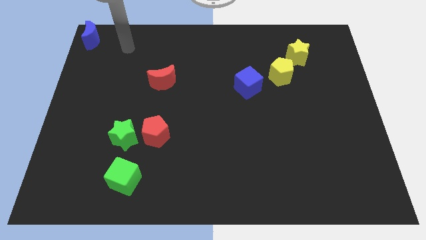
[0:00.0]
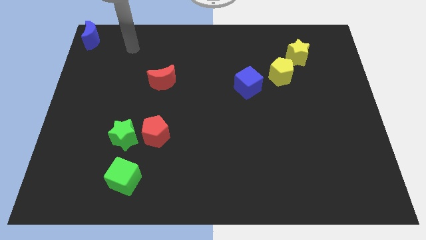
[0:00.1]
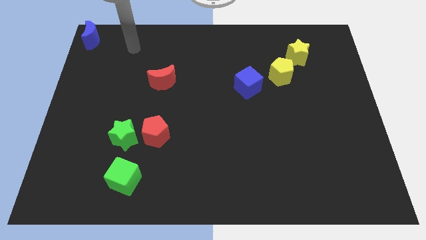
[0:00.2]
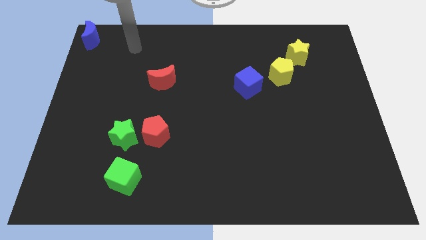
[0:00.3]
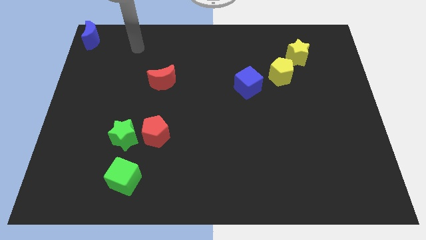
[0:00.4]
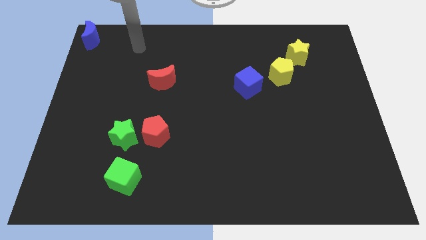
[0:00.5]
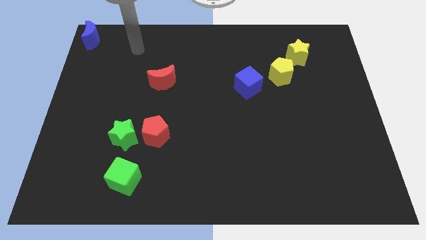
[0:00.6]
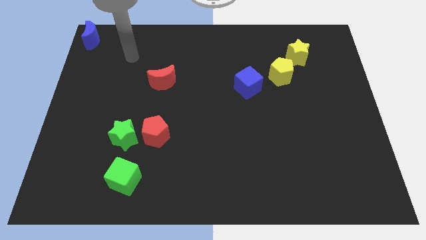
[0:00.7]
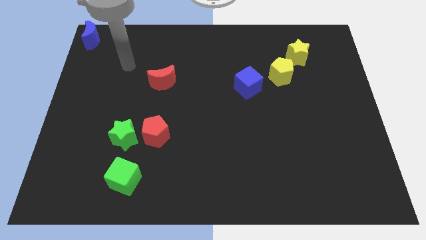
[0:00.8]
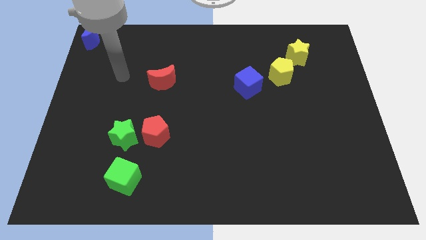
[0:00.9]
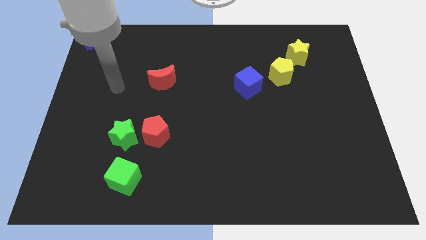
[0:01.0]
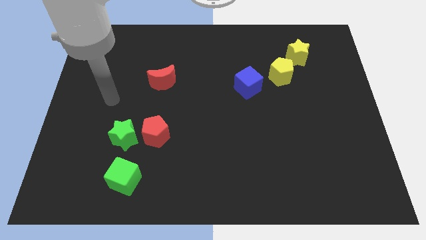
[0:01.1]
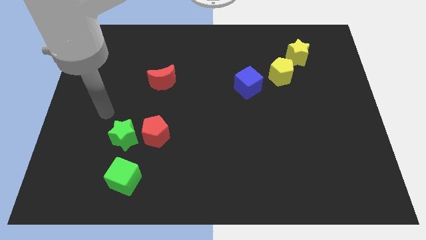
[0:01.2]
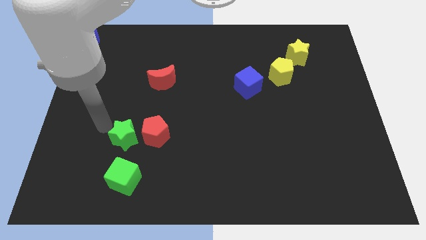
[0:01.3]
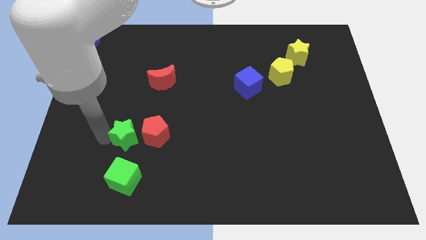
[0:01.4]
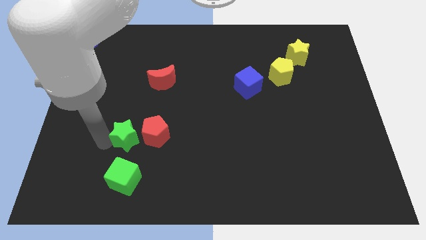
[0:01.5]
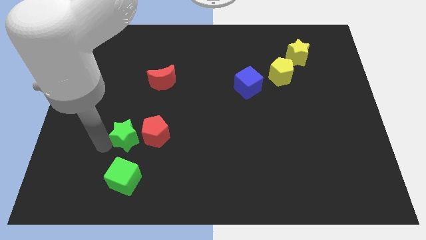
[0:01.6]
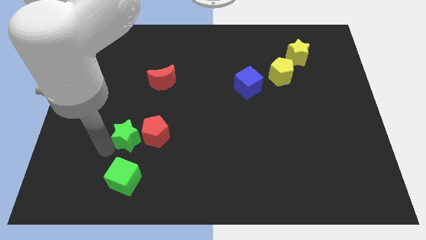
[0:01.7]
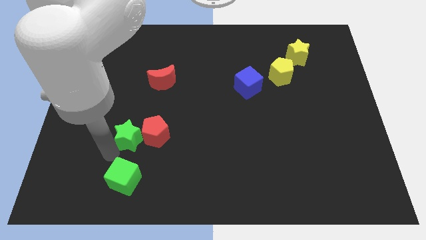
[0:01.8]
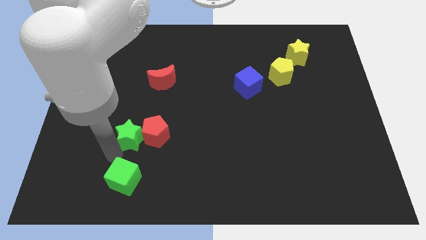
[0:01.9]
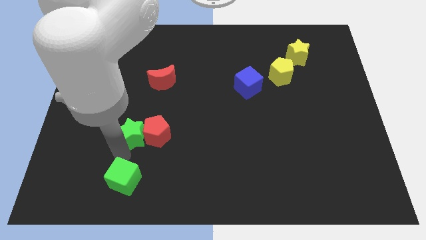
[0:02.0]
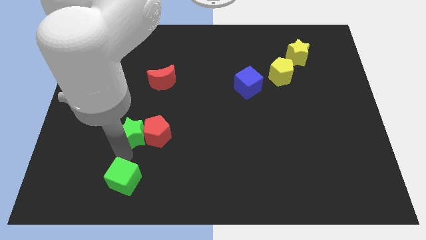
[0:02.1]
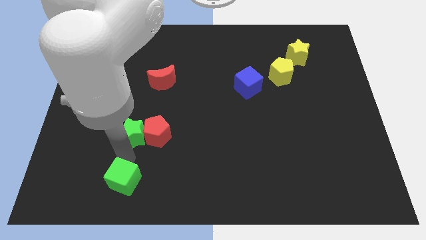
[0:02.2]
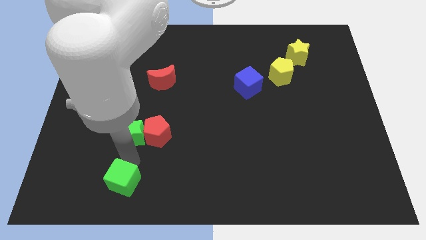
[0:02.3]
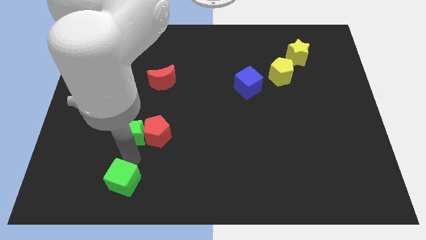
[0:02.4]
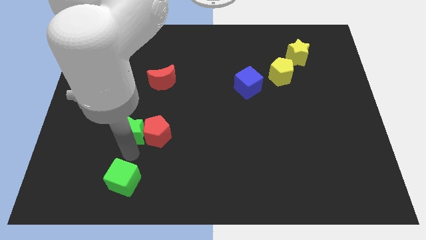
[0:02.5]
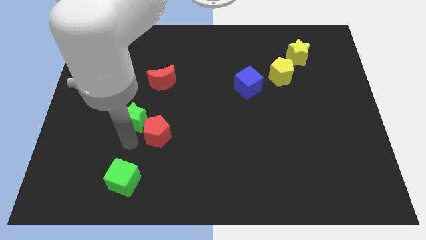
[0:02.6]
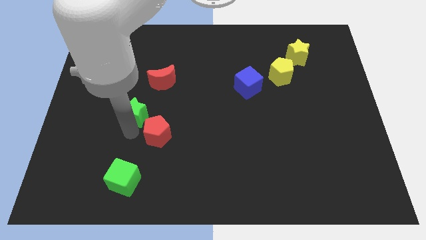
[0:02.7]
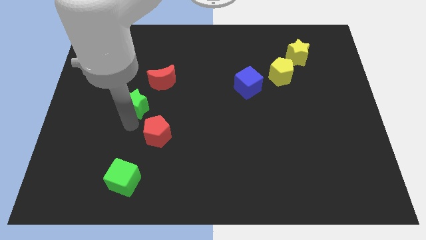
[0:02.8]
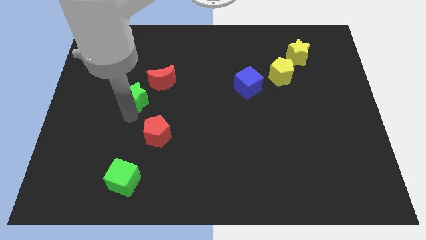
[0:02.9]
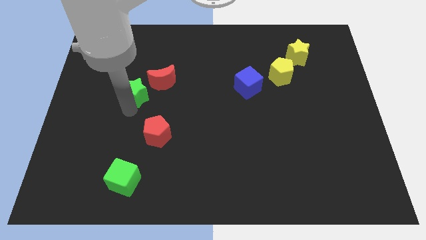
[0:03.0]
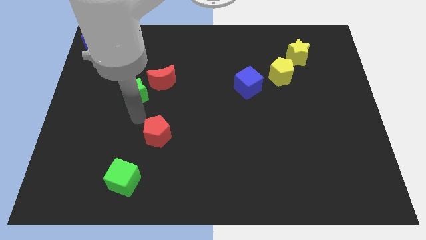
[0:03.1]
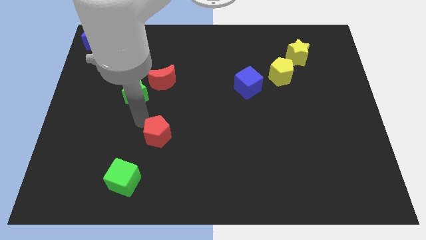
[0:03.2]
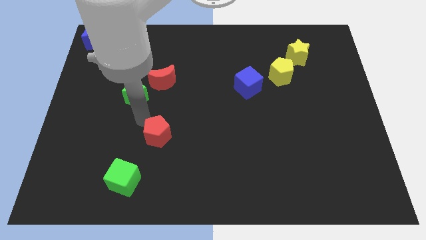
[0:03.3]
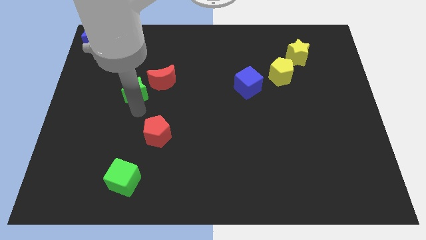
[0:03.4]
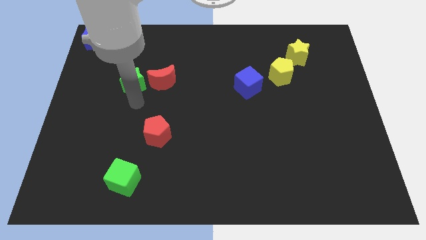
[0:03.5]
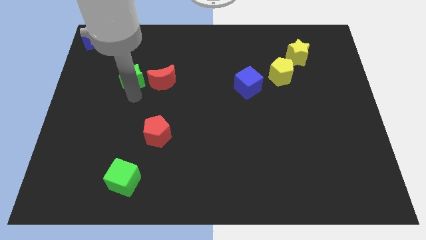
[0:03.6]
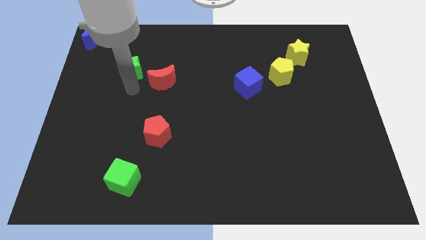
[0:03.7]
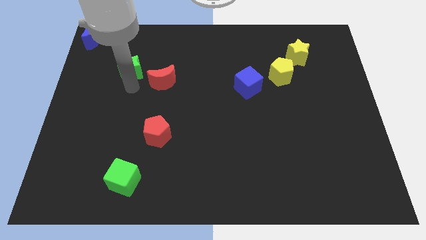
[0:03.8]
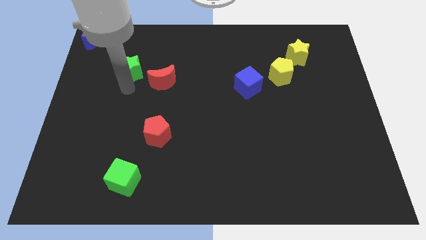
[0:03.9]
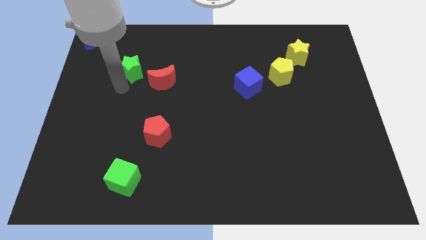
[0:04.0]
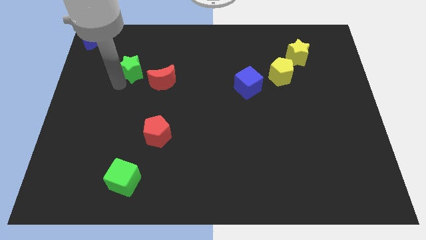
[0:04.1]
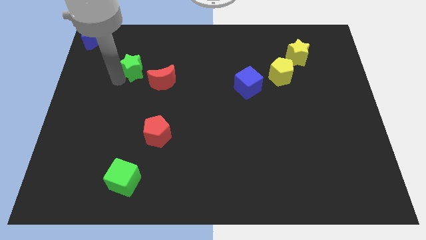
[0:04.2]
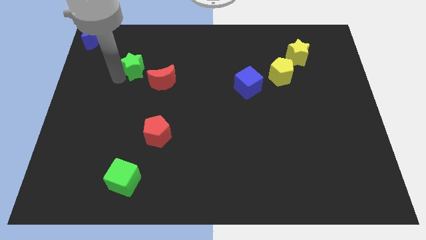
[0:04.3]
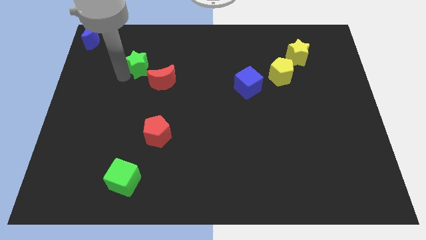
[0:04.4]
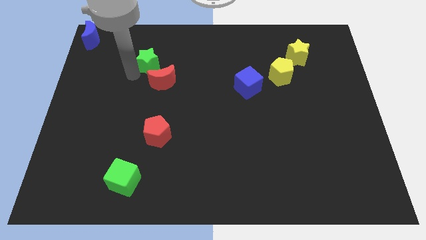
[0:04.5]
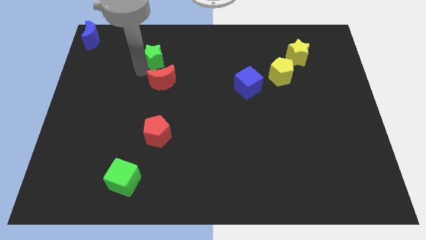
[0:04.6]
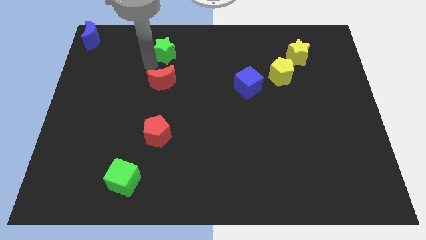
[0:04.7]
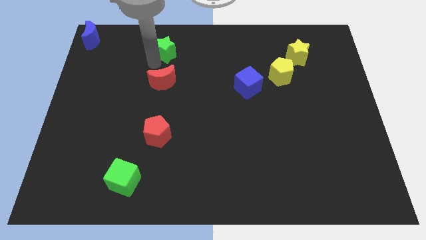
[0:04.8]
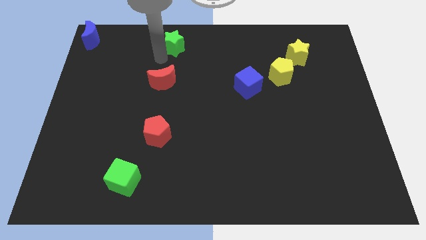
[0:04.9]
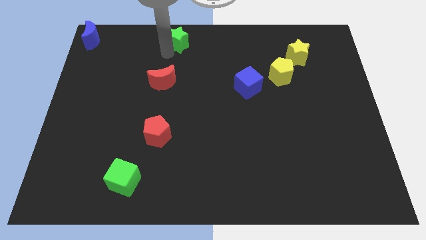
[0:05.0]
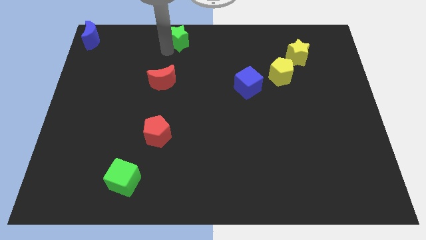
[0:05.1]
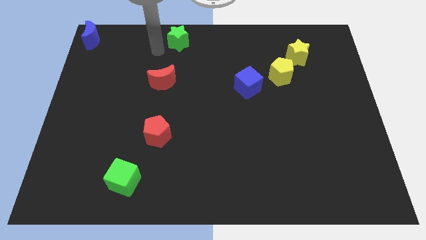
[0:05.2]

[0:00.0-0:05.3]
separate the green star from the red pentagon

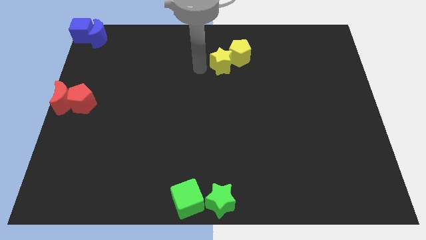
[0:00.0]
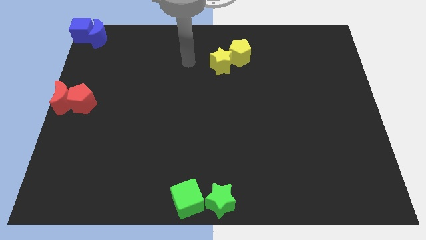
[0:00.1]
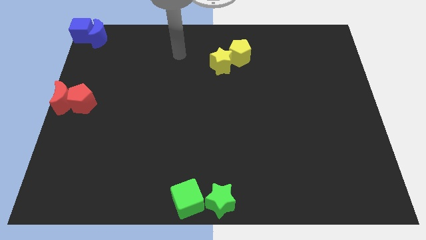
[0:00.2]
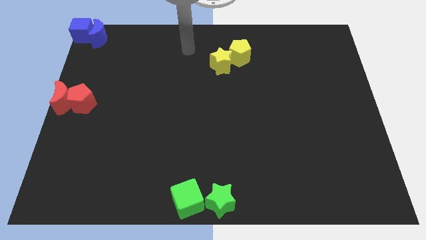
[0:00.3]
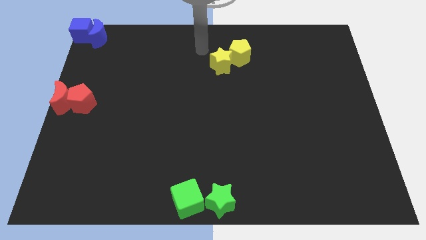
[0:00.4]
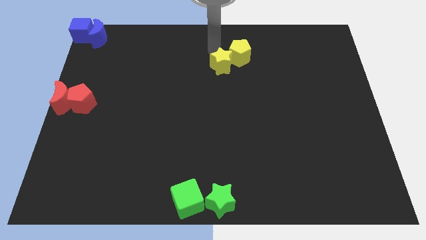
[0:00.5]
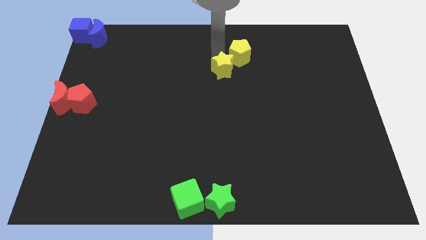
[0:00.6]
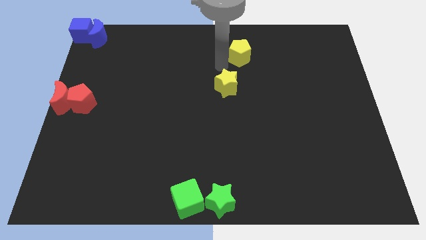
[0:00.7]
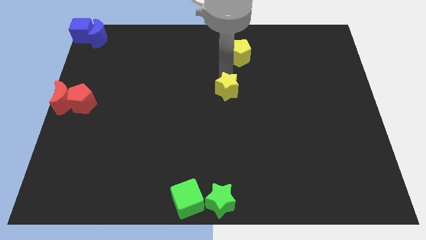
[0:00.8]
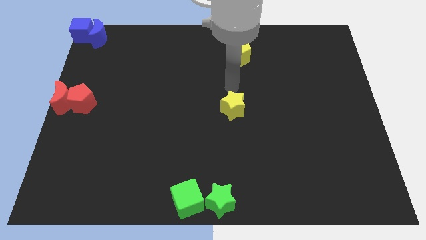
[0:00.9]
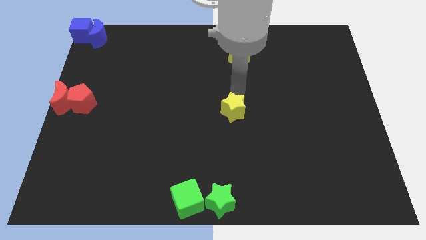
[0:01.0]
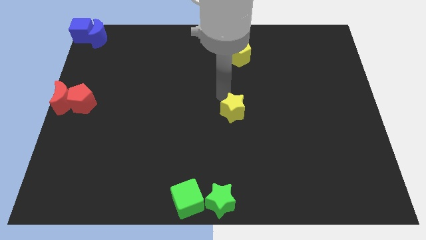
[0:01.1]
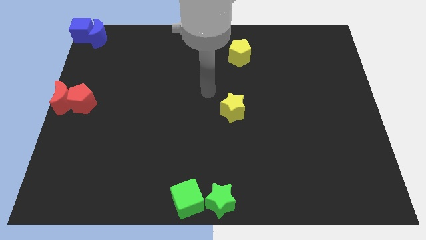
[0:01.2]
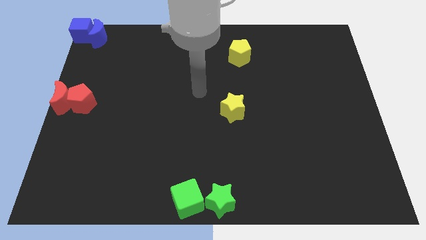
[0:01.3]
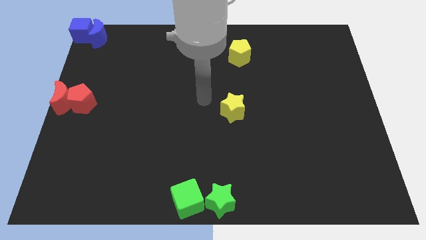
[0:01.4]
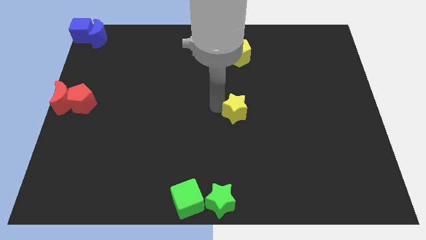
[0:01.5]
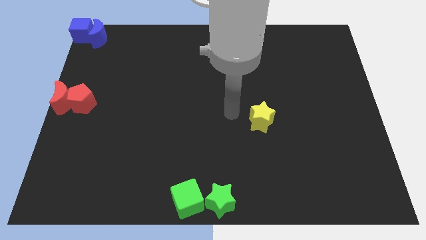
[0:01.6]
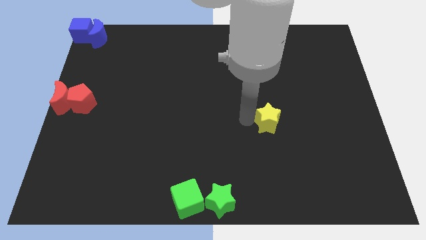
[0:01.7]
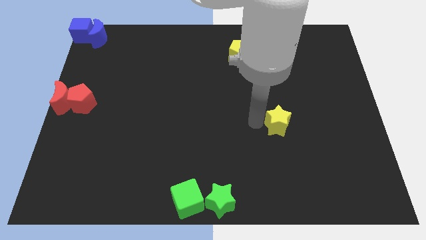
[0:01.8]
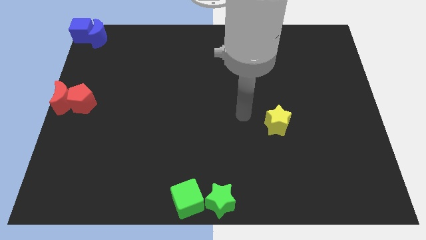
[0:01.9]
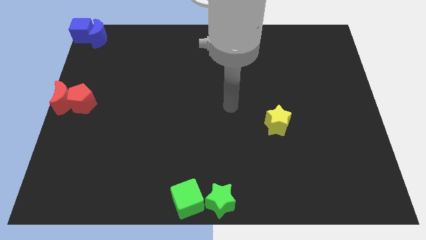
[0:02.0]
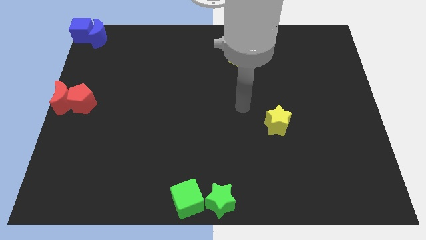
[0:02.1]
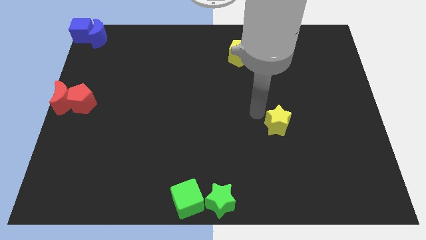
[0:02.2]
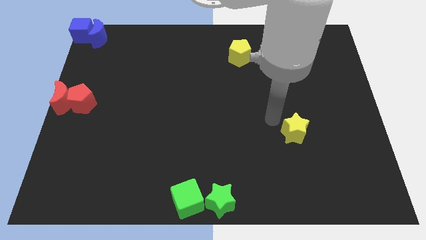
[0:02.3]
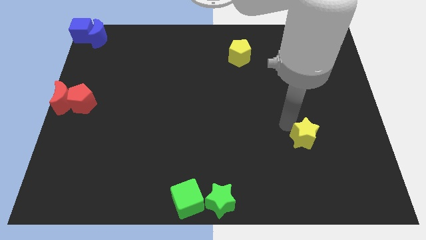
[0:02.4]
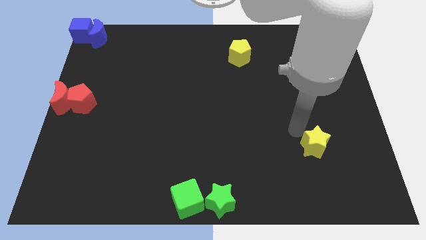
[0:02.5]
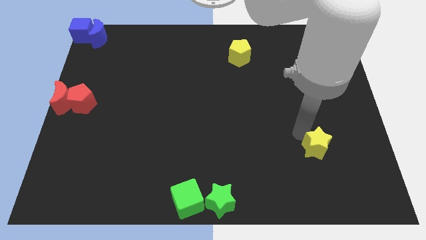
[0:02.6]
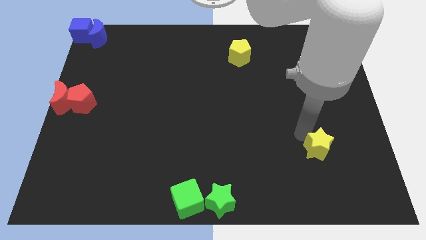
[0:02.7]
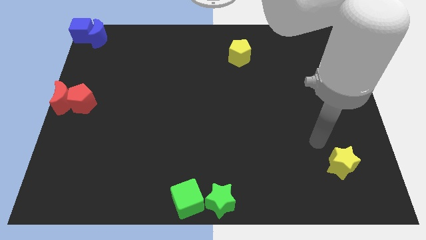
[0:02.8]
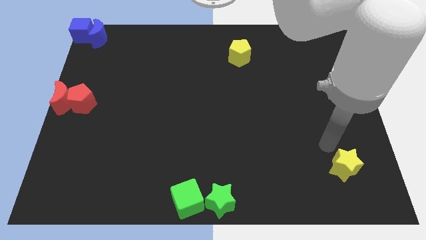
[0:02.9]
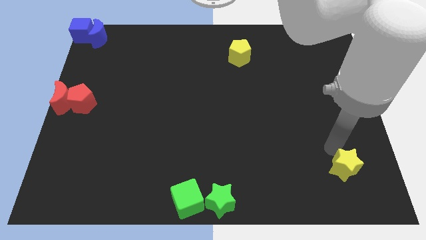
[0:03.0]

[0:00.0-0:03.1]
separate the yellow star from the yellow pentagon

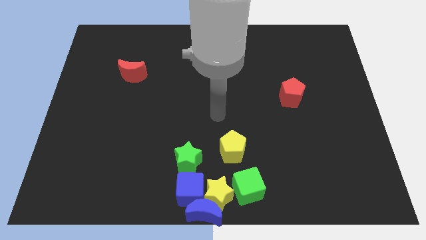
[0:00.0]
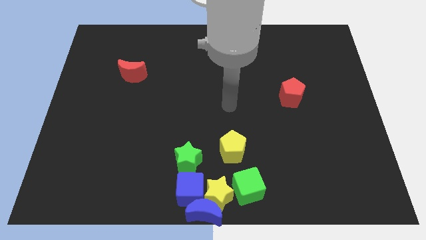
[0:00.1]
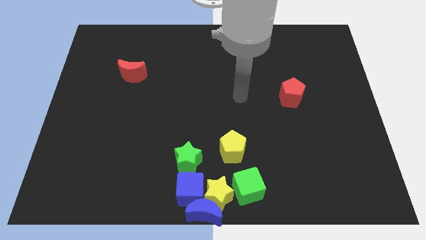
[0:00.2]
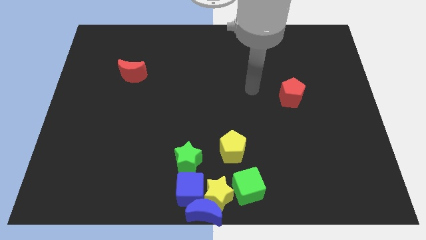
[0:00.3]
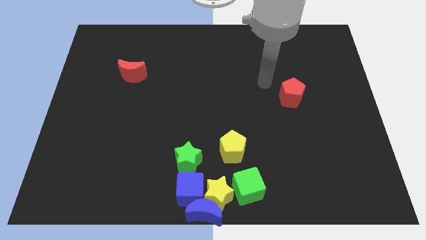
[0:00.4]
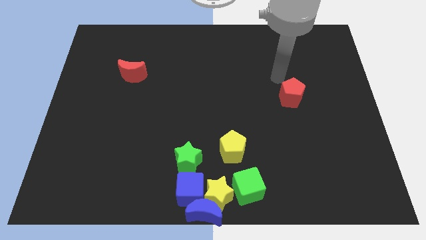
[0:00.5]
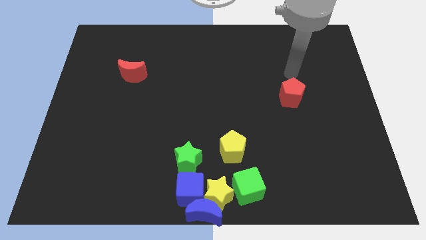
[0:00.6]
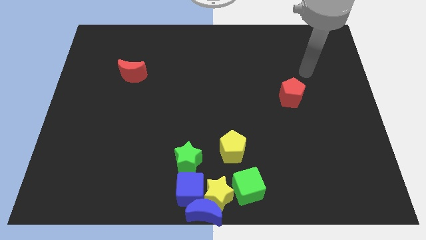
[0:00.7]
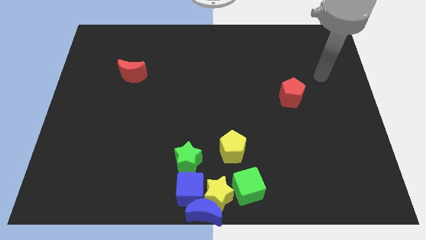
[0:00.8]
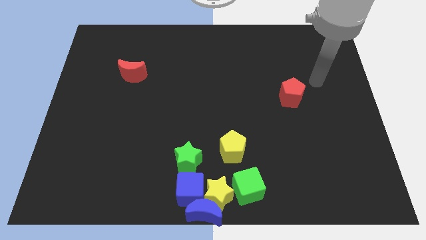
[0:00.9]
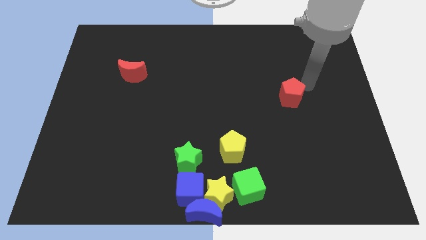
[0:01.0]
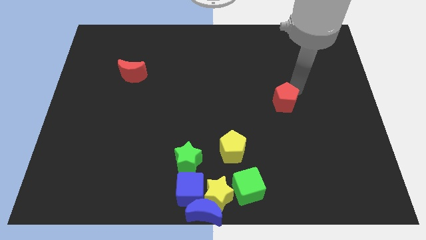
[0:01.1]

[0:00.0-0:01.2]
tap the red pentagon
